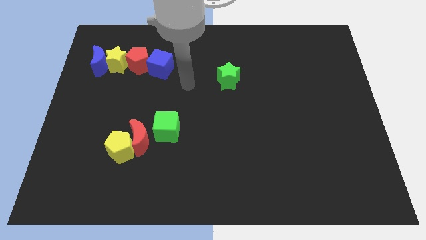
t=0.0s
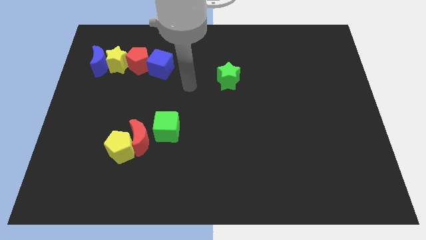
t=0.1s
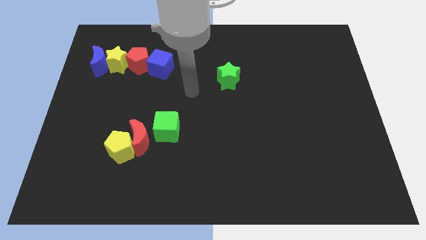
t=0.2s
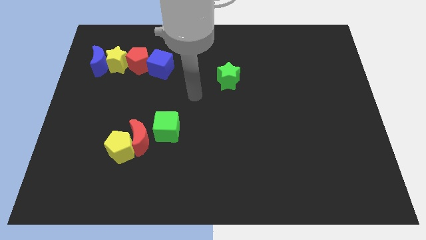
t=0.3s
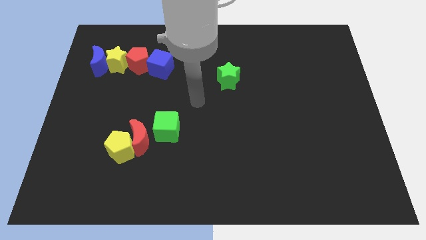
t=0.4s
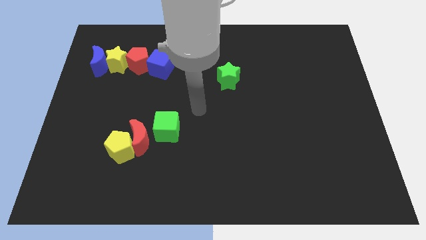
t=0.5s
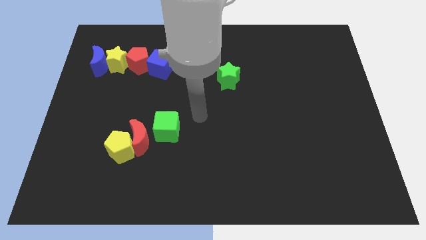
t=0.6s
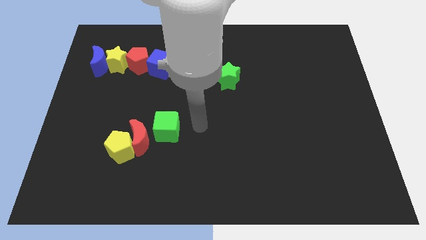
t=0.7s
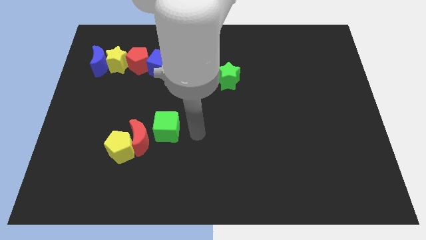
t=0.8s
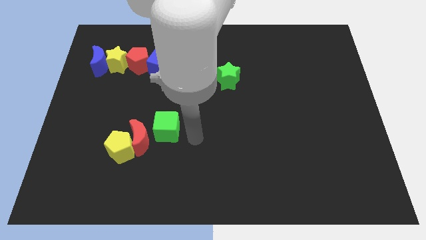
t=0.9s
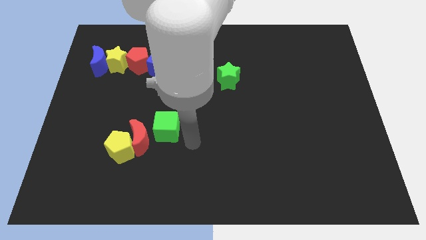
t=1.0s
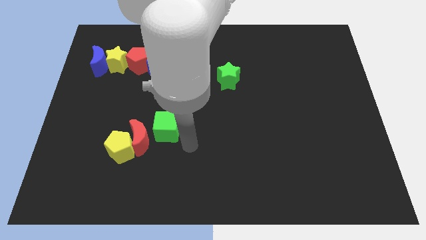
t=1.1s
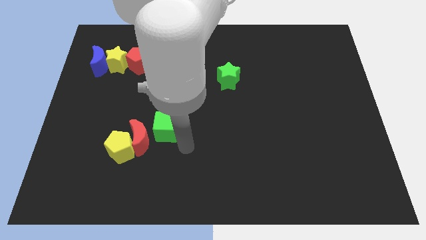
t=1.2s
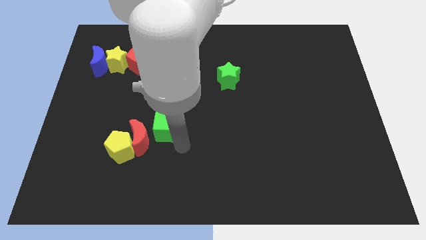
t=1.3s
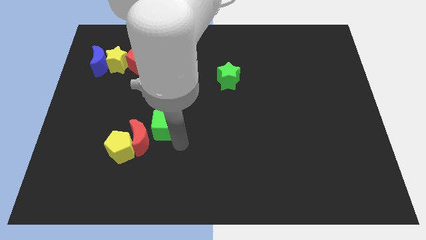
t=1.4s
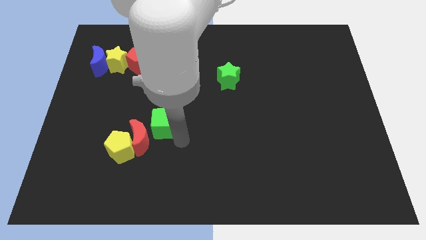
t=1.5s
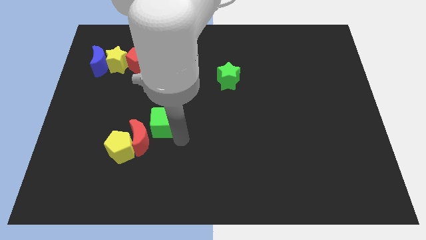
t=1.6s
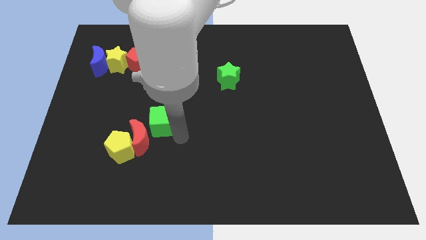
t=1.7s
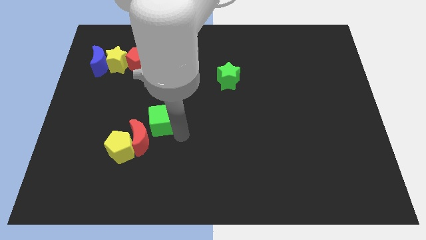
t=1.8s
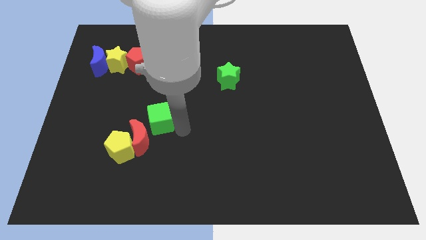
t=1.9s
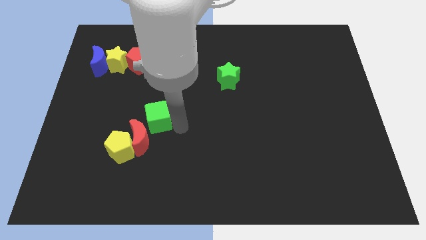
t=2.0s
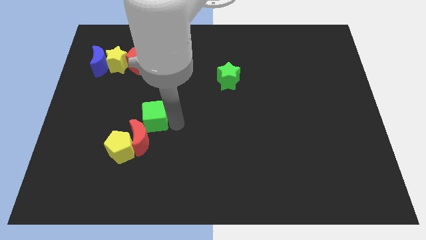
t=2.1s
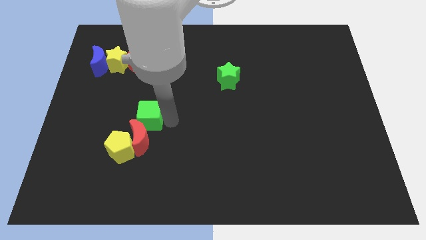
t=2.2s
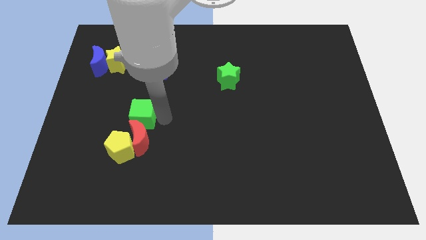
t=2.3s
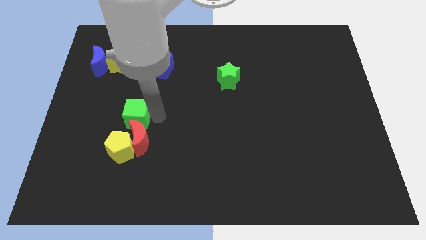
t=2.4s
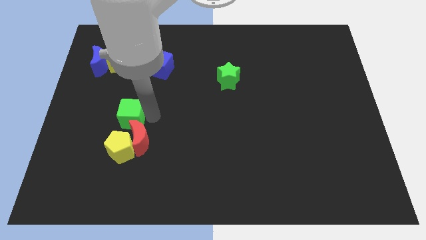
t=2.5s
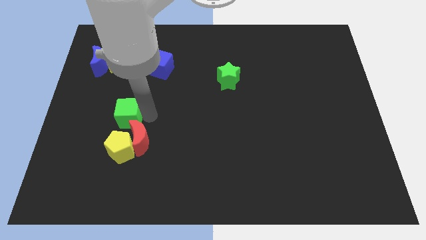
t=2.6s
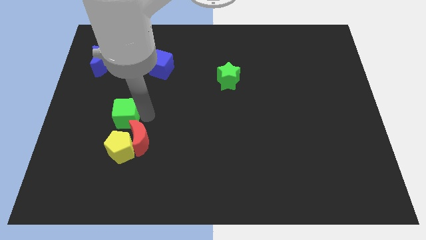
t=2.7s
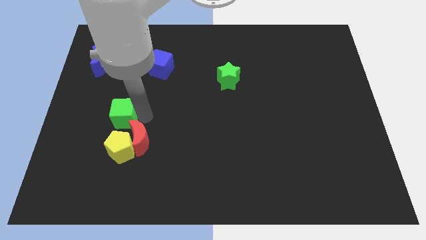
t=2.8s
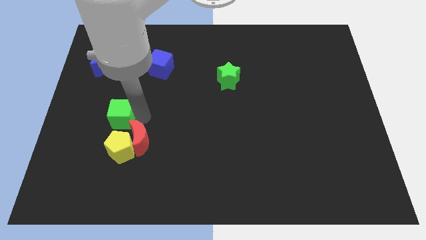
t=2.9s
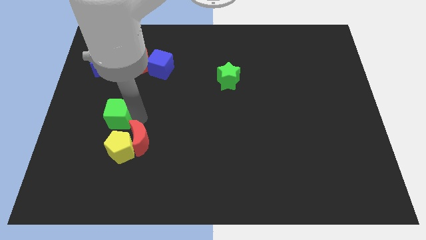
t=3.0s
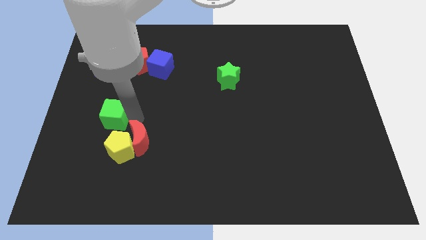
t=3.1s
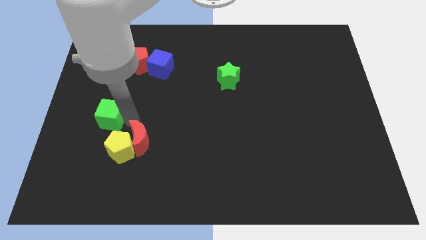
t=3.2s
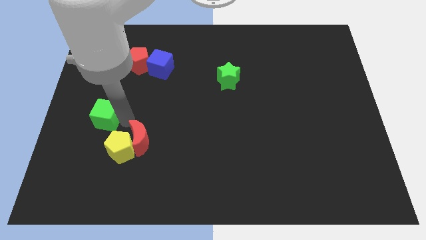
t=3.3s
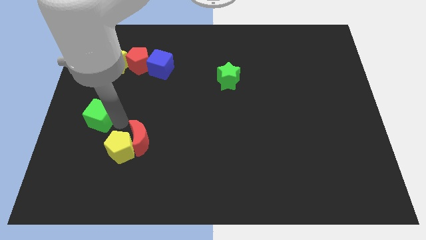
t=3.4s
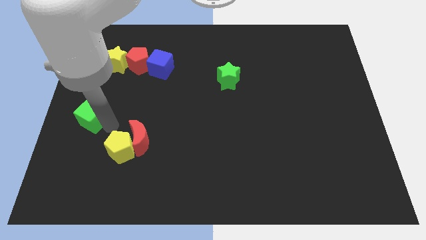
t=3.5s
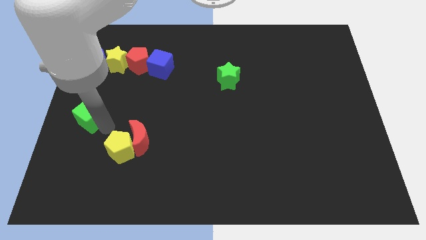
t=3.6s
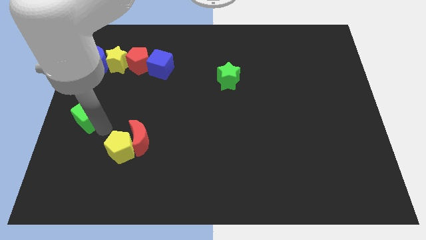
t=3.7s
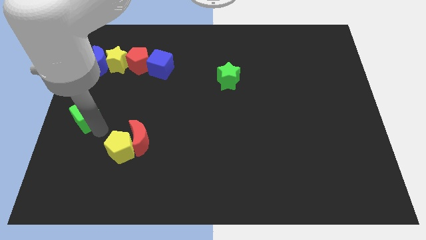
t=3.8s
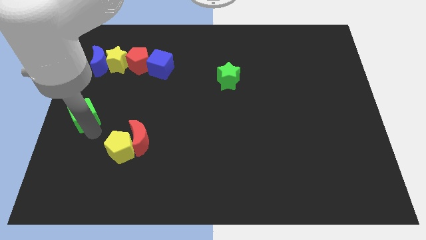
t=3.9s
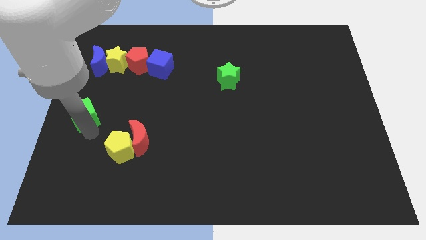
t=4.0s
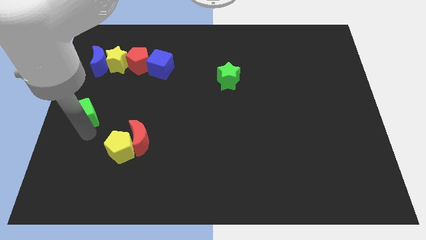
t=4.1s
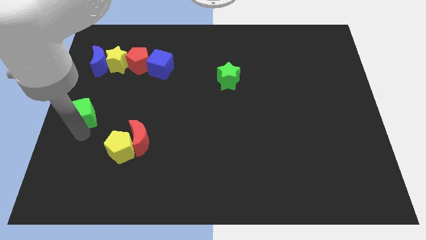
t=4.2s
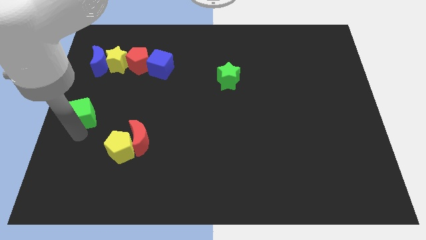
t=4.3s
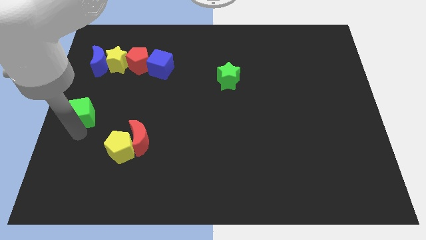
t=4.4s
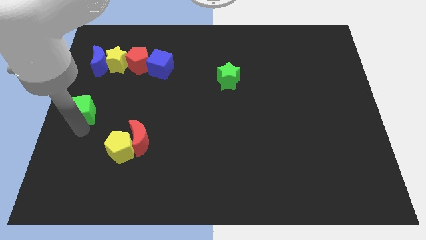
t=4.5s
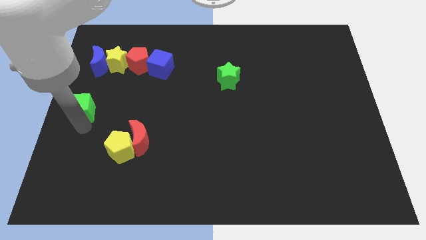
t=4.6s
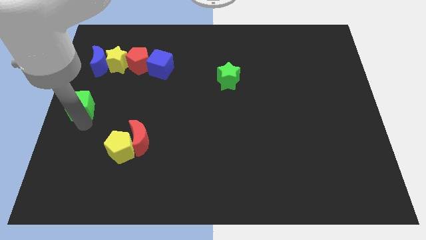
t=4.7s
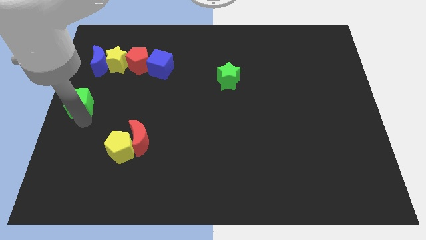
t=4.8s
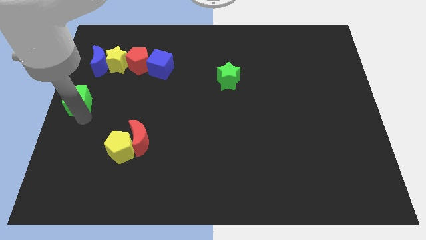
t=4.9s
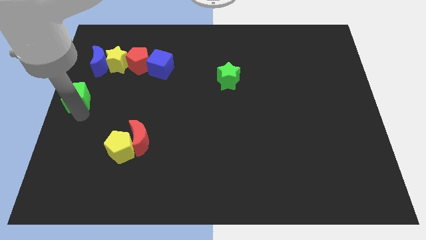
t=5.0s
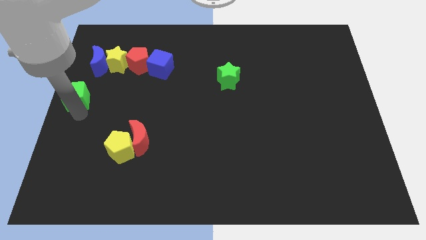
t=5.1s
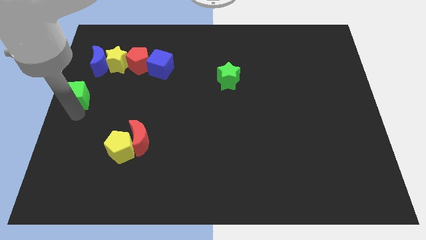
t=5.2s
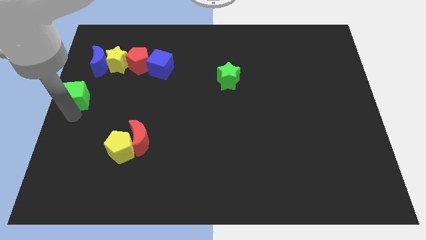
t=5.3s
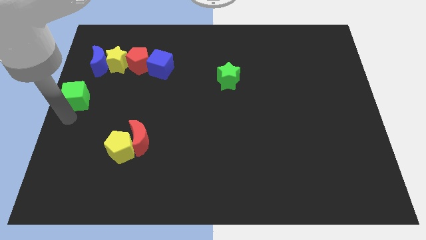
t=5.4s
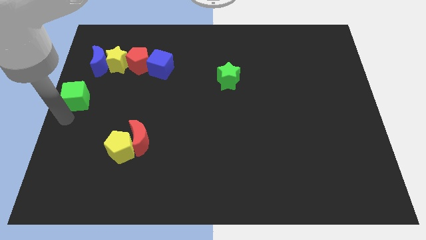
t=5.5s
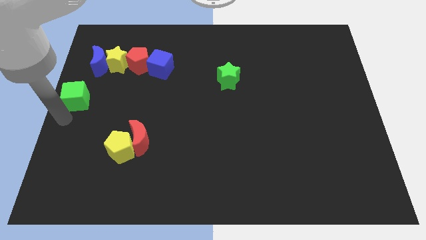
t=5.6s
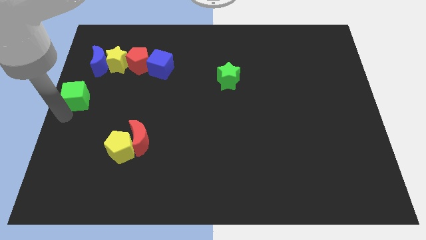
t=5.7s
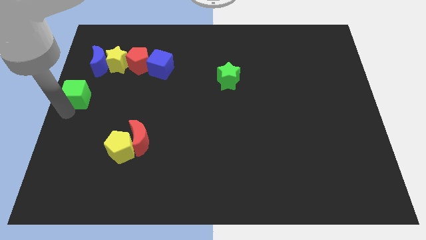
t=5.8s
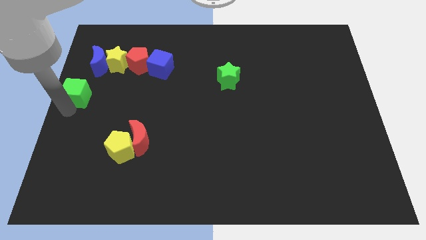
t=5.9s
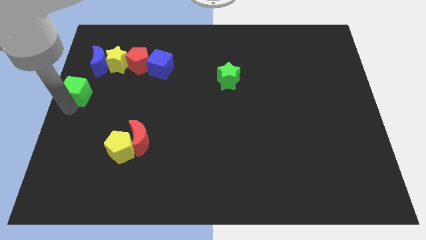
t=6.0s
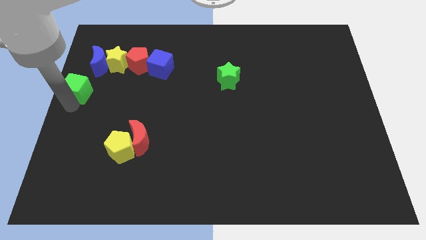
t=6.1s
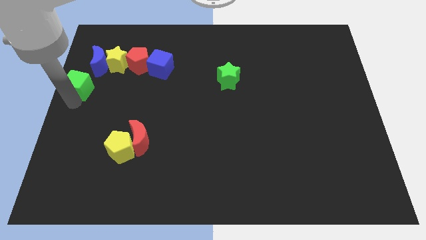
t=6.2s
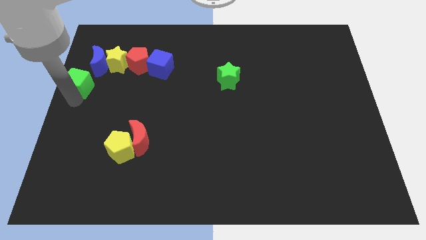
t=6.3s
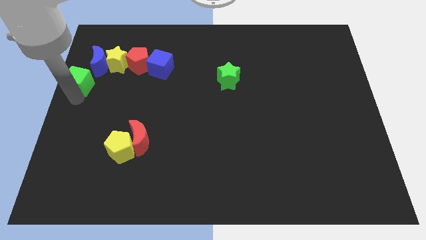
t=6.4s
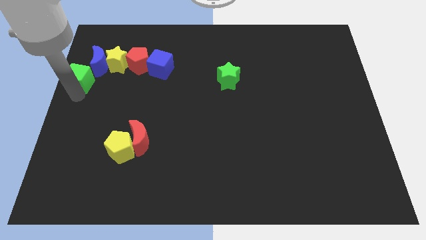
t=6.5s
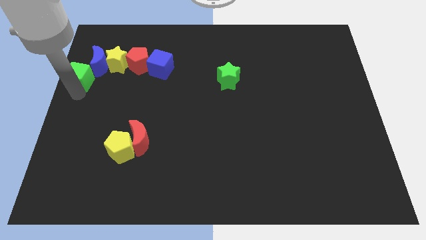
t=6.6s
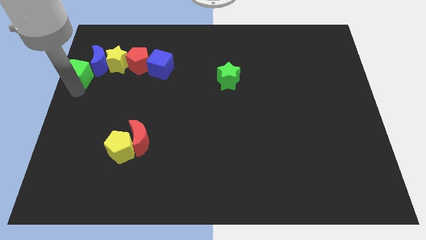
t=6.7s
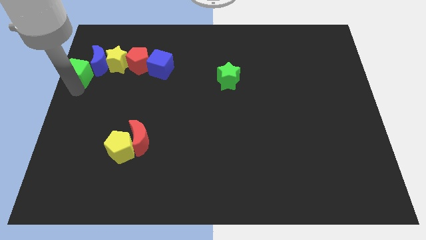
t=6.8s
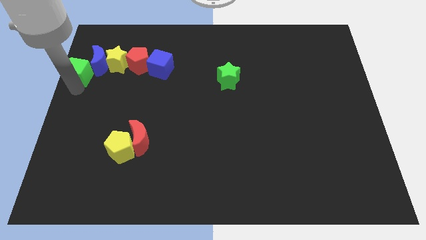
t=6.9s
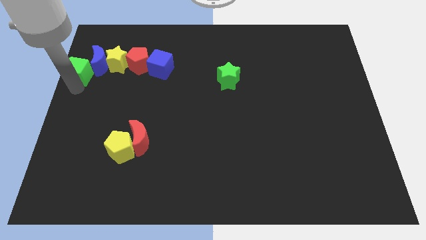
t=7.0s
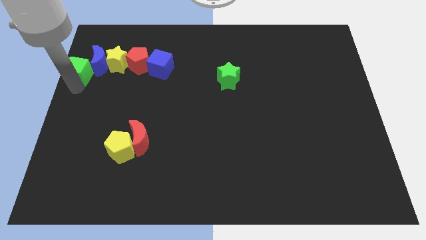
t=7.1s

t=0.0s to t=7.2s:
move the green cube towards the blue moon

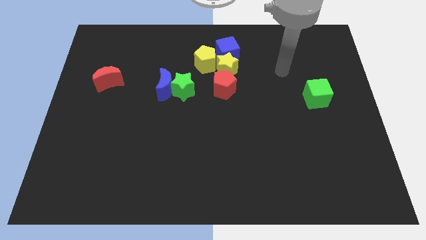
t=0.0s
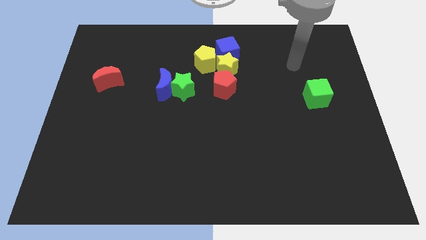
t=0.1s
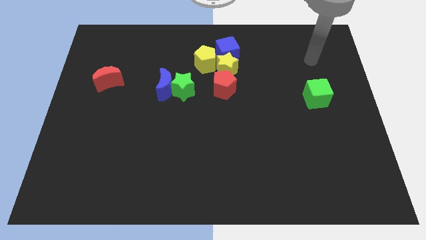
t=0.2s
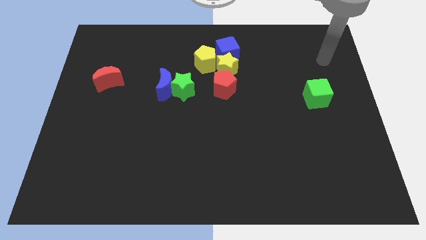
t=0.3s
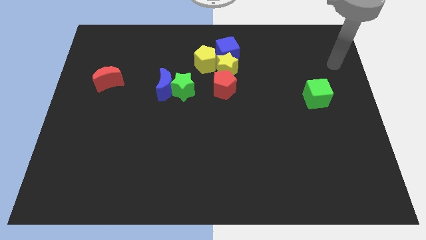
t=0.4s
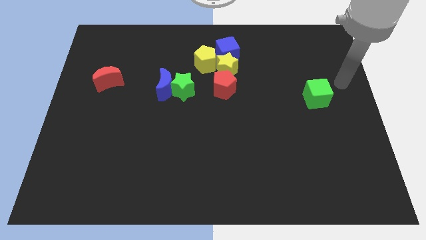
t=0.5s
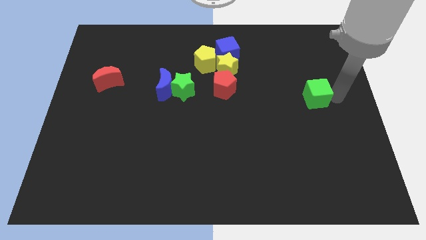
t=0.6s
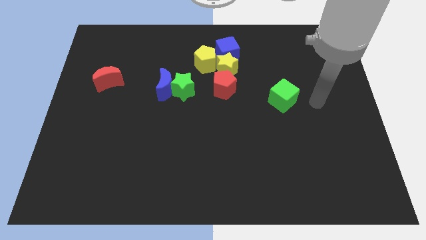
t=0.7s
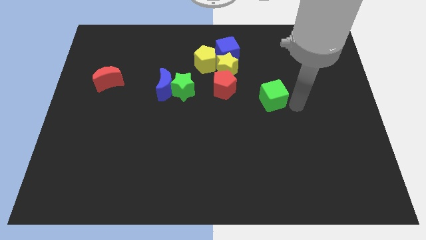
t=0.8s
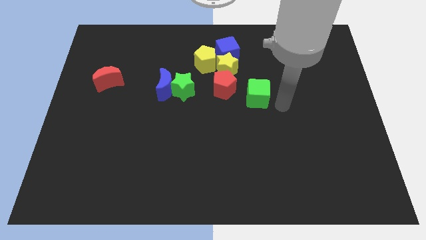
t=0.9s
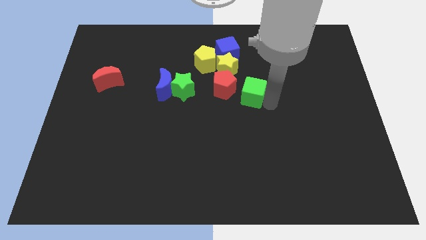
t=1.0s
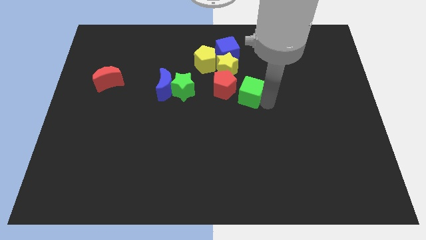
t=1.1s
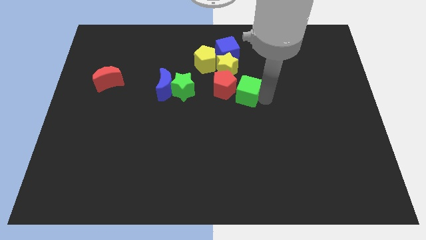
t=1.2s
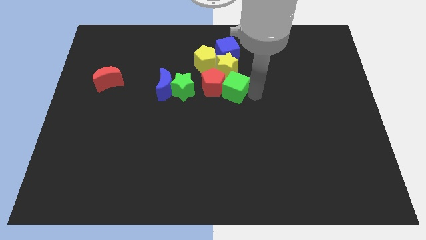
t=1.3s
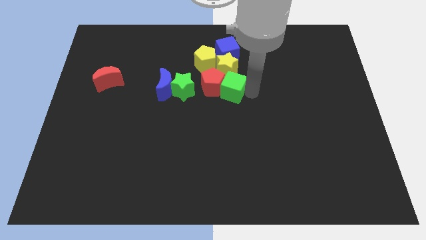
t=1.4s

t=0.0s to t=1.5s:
slide the green cube to the red pentagon
